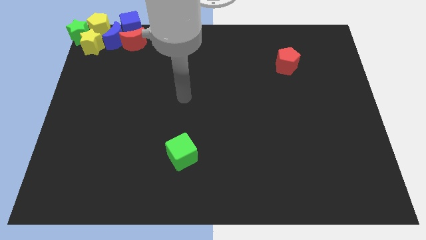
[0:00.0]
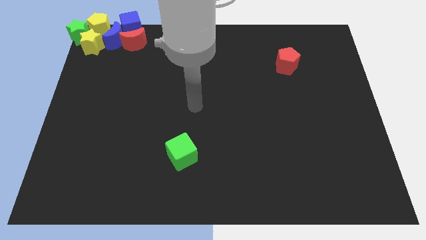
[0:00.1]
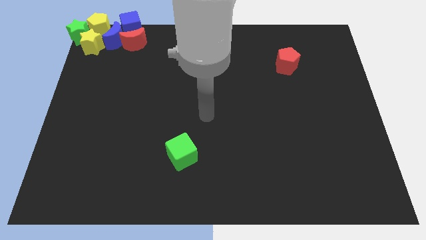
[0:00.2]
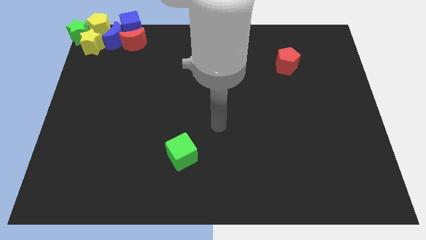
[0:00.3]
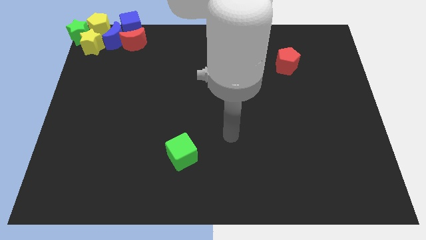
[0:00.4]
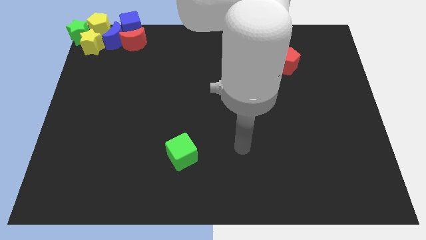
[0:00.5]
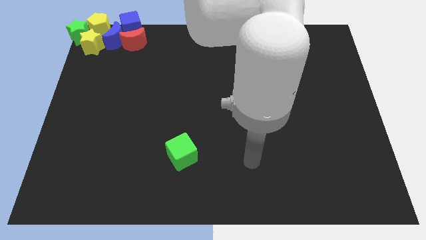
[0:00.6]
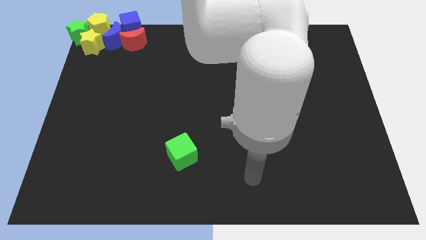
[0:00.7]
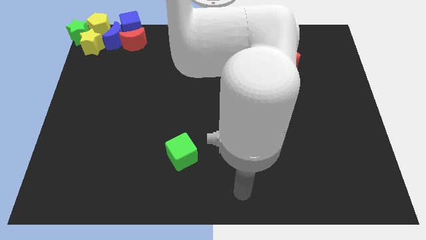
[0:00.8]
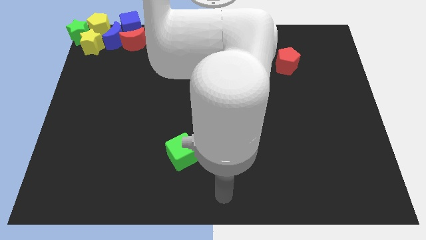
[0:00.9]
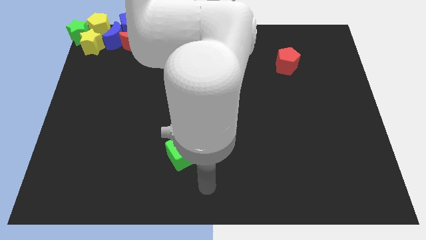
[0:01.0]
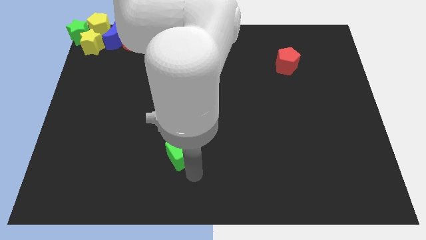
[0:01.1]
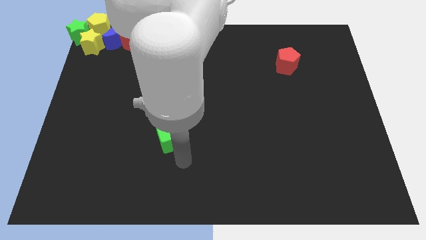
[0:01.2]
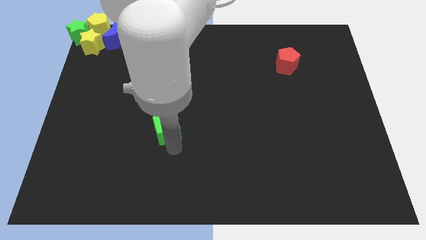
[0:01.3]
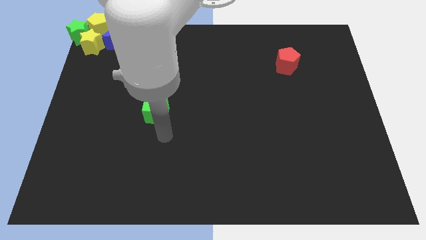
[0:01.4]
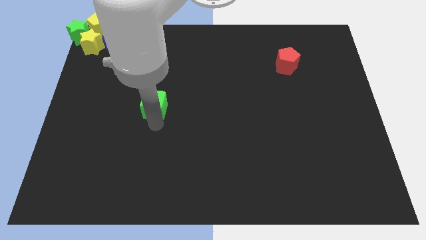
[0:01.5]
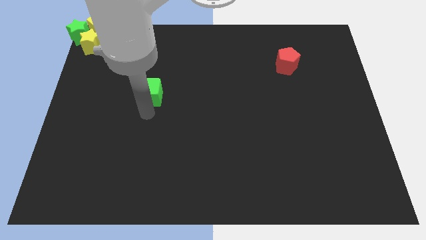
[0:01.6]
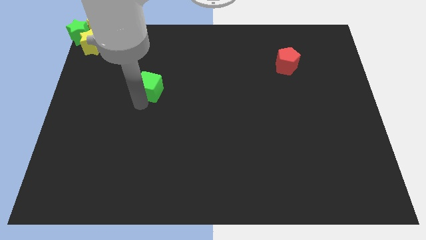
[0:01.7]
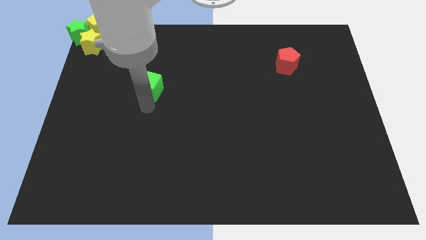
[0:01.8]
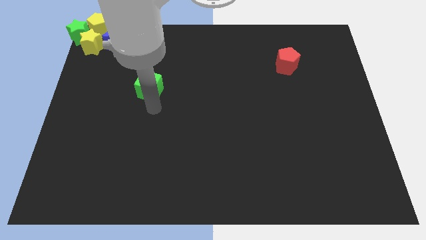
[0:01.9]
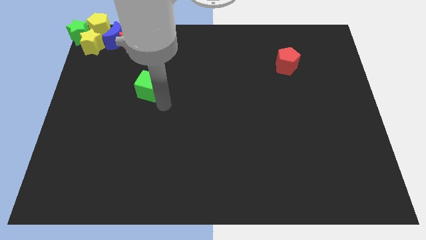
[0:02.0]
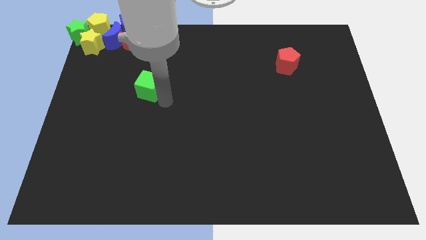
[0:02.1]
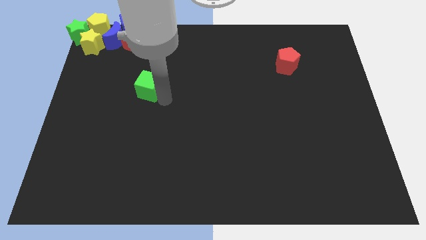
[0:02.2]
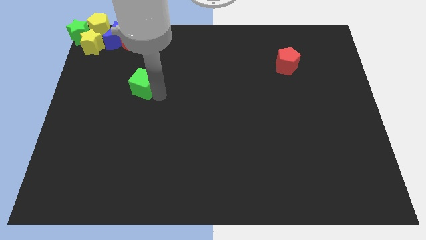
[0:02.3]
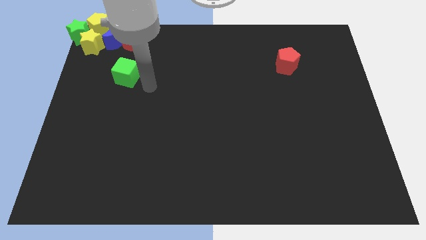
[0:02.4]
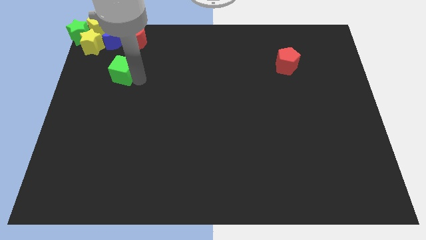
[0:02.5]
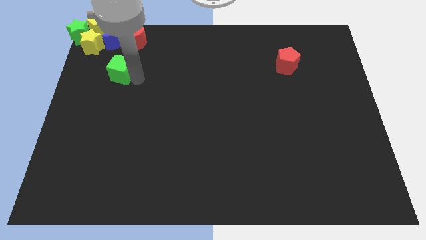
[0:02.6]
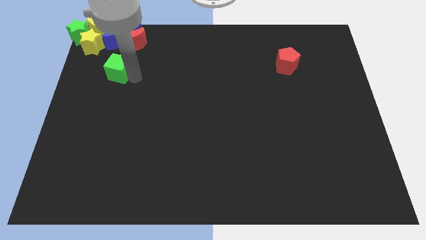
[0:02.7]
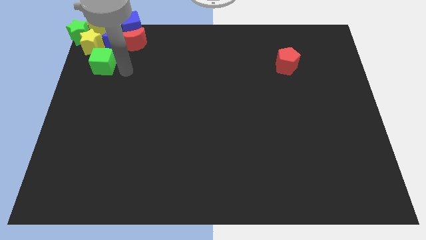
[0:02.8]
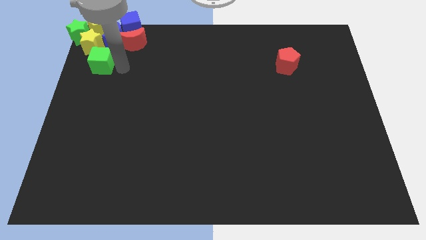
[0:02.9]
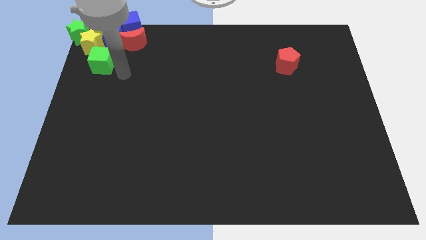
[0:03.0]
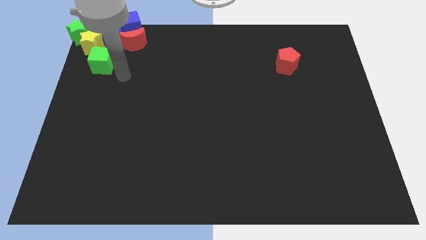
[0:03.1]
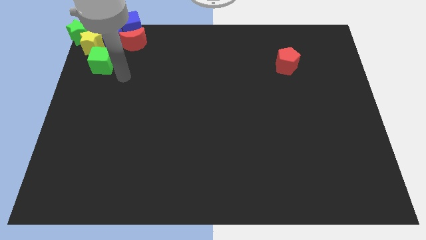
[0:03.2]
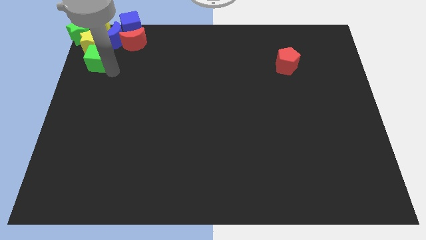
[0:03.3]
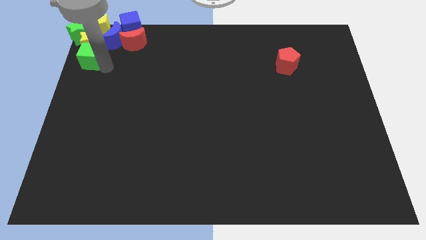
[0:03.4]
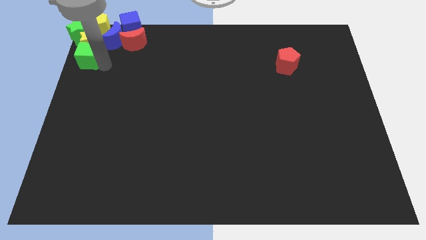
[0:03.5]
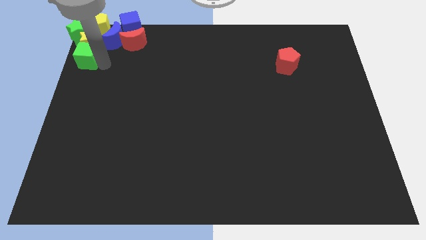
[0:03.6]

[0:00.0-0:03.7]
move the green cube to the bottom of the yellow star

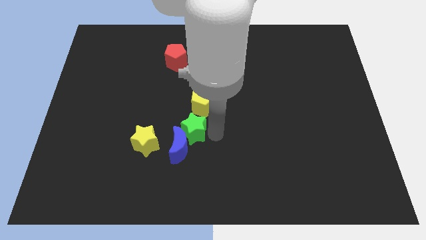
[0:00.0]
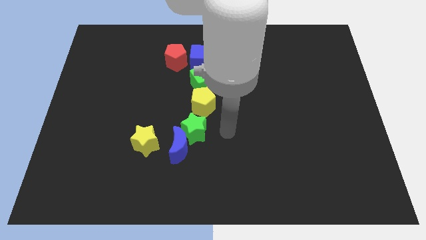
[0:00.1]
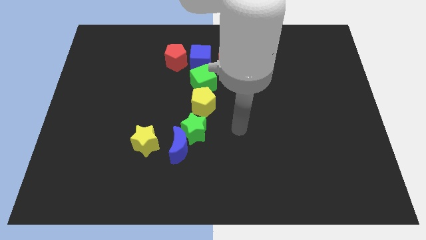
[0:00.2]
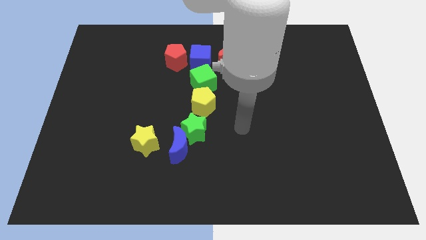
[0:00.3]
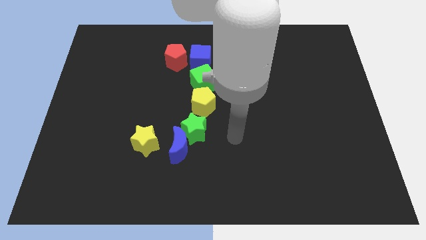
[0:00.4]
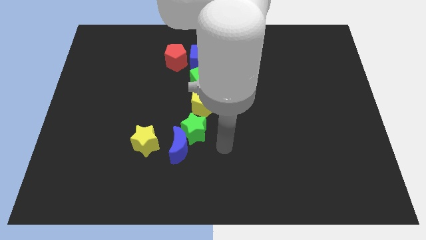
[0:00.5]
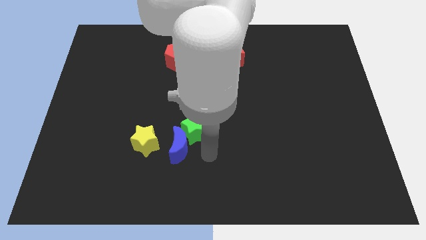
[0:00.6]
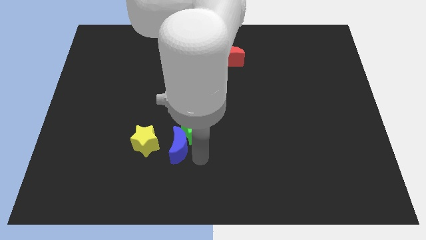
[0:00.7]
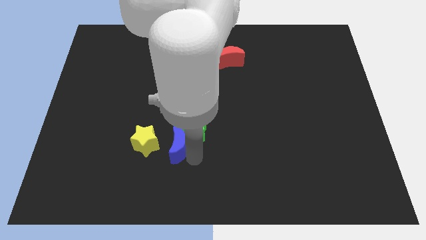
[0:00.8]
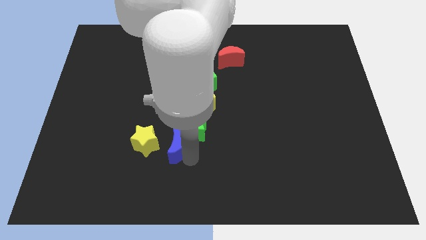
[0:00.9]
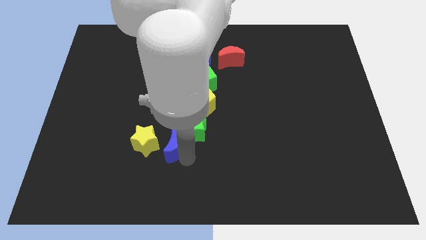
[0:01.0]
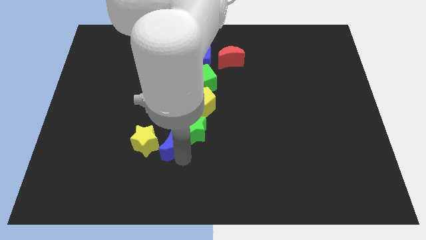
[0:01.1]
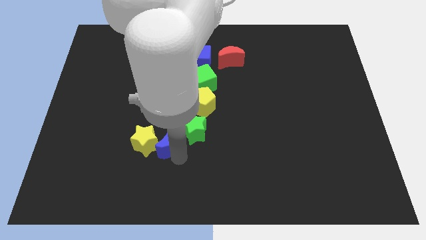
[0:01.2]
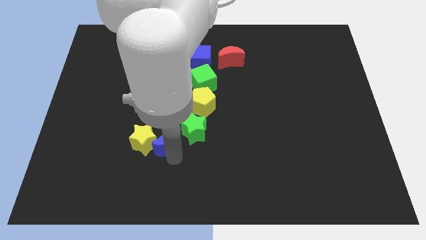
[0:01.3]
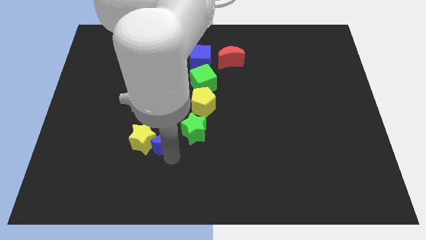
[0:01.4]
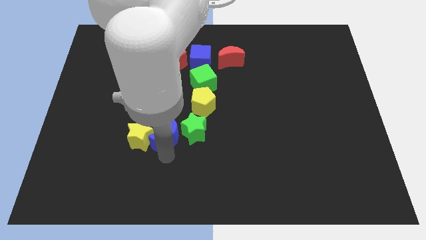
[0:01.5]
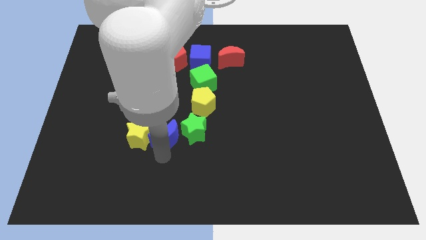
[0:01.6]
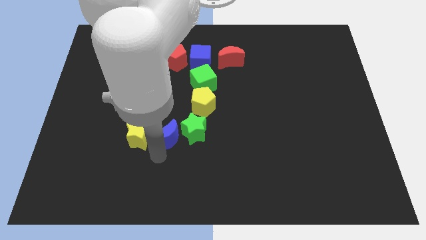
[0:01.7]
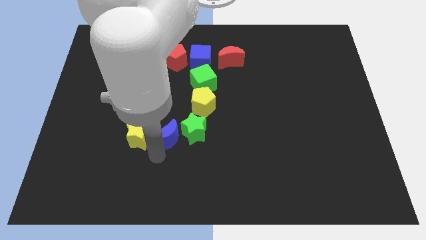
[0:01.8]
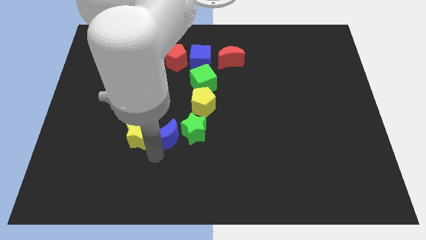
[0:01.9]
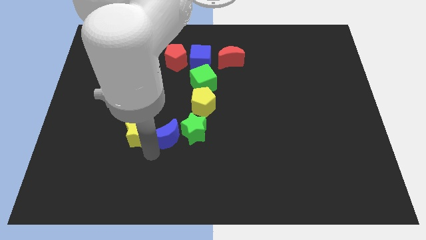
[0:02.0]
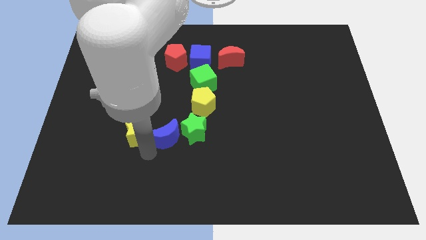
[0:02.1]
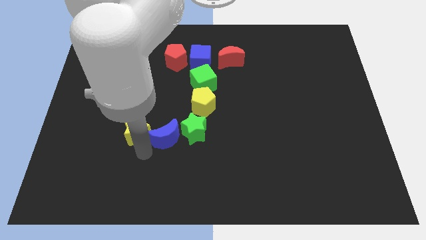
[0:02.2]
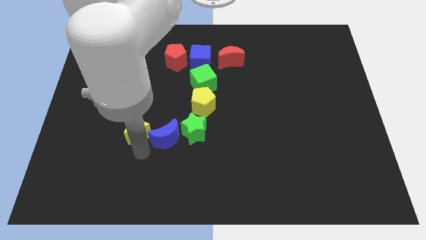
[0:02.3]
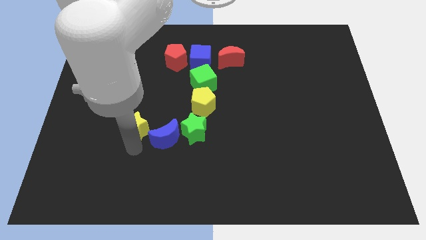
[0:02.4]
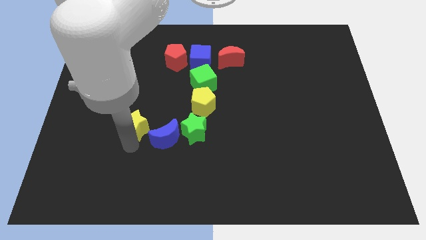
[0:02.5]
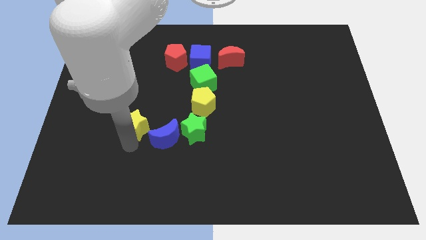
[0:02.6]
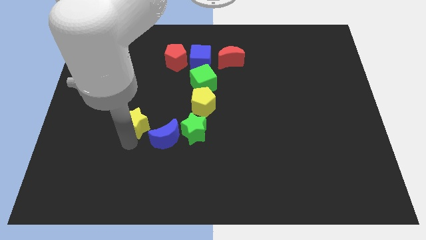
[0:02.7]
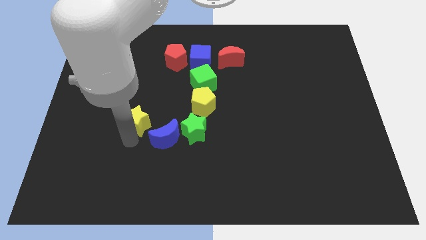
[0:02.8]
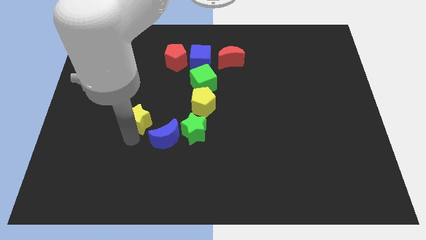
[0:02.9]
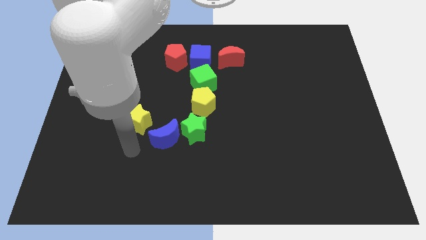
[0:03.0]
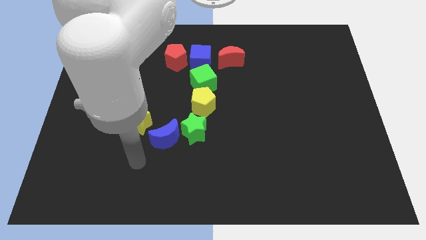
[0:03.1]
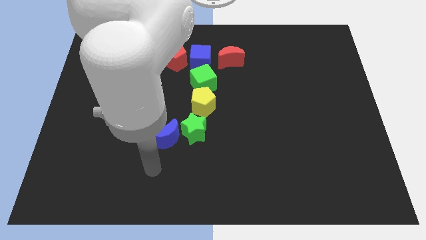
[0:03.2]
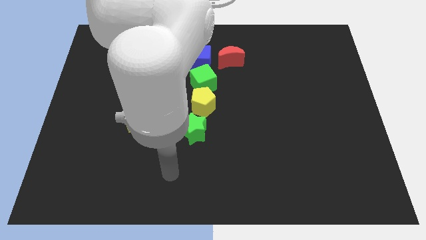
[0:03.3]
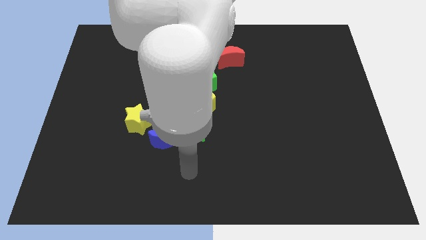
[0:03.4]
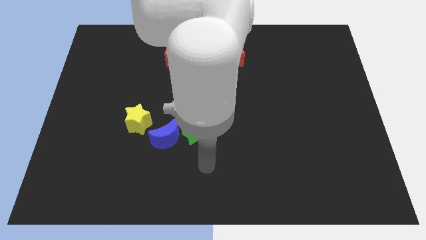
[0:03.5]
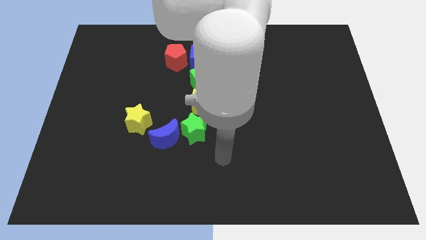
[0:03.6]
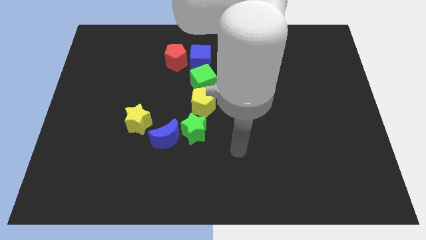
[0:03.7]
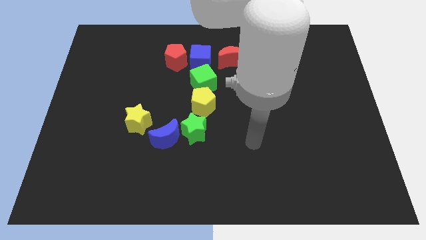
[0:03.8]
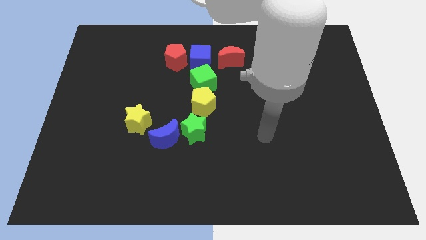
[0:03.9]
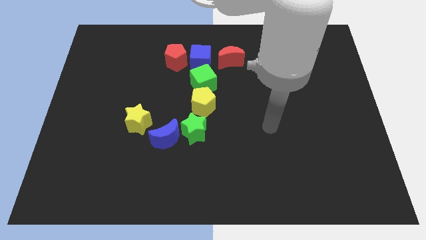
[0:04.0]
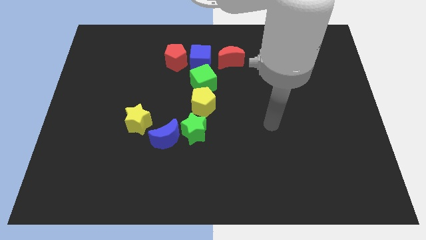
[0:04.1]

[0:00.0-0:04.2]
slide the blue moon and yellow star slightly to the top side of the board

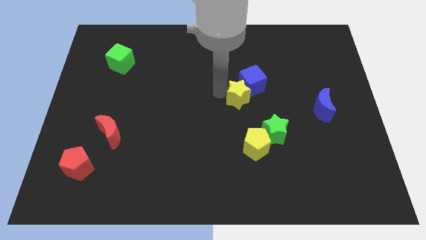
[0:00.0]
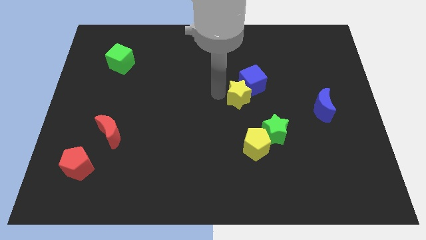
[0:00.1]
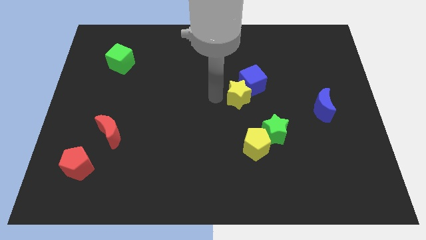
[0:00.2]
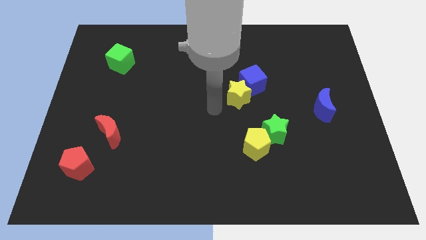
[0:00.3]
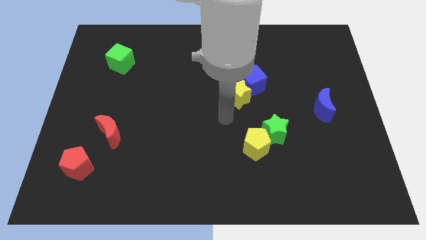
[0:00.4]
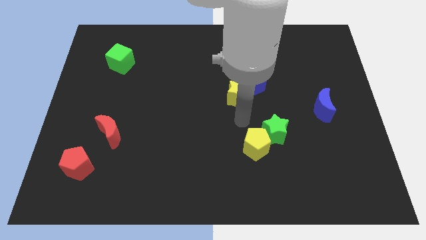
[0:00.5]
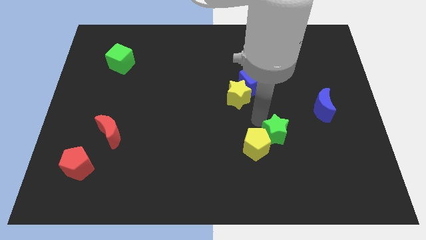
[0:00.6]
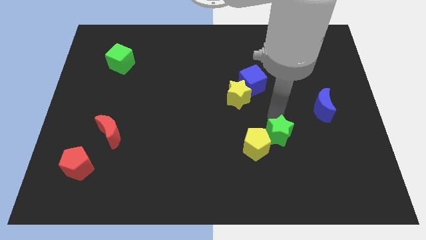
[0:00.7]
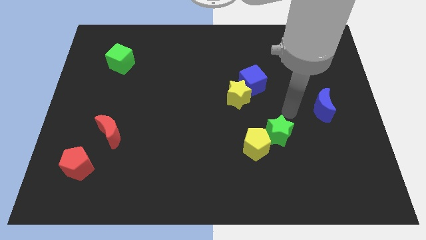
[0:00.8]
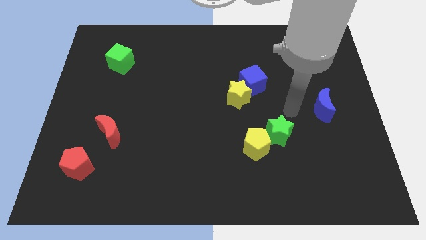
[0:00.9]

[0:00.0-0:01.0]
move your arm away from the yellow star

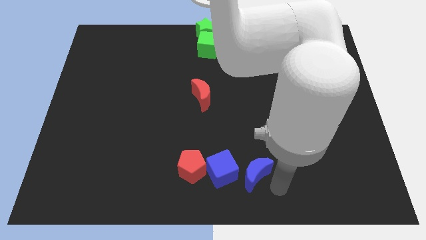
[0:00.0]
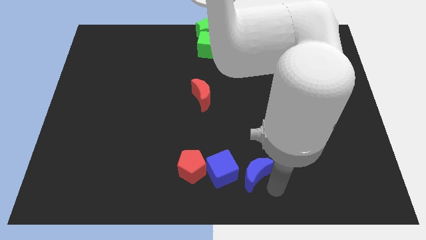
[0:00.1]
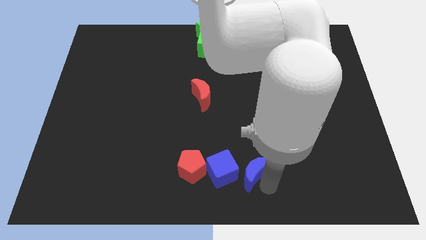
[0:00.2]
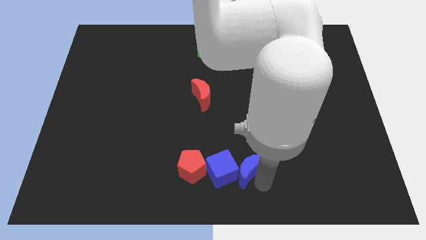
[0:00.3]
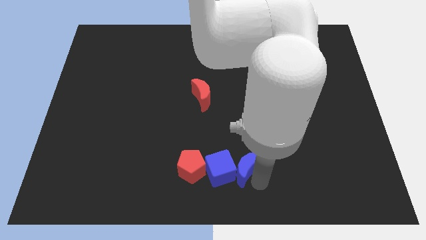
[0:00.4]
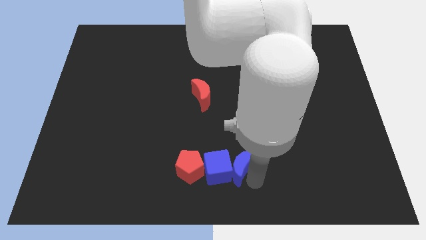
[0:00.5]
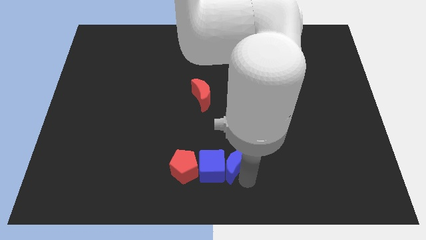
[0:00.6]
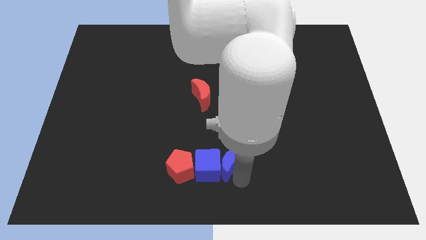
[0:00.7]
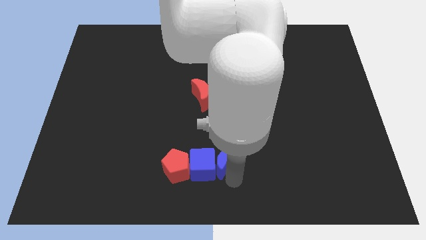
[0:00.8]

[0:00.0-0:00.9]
move the blue moon right to the blue cube
